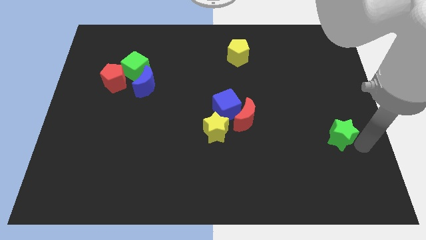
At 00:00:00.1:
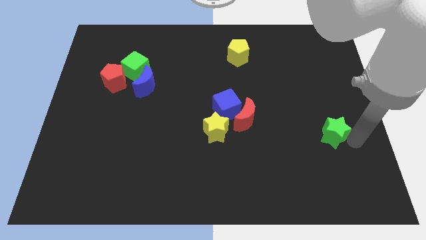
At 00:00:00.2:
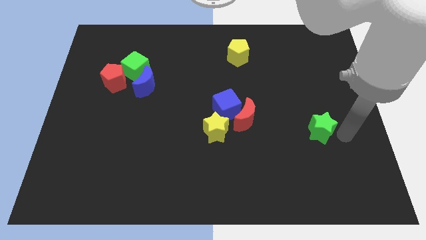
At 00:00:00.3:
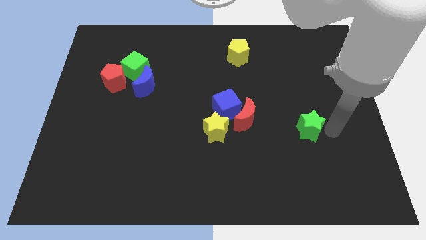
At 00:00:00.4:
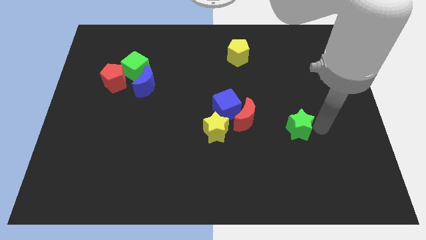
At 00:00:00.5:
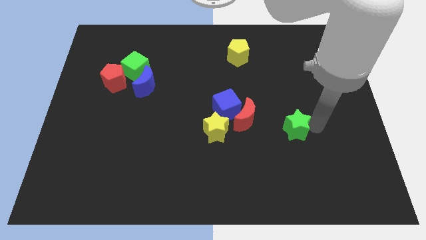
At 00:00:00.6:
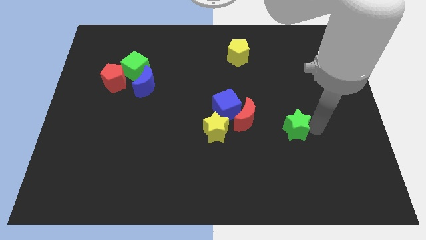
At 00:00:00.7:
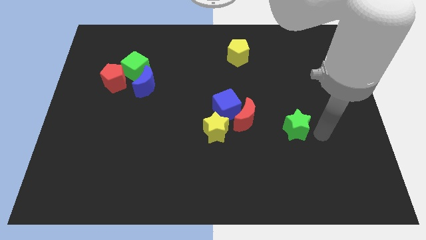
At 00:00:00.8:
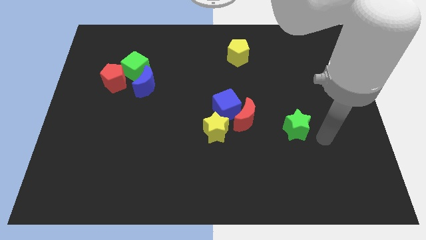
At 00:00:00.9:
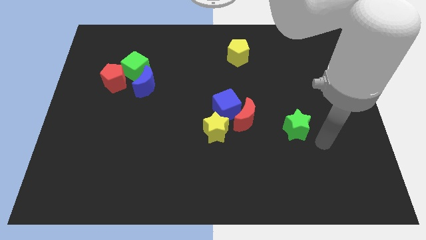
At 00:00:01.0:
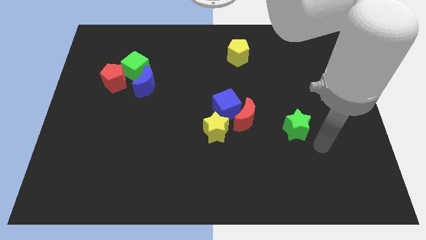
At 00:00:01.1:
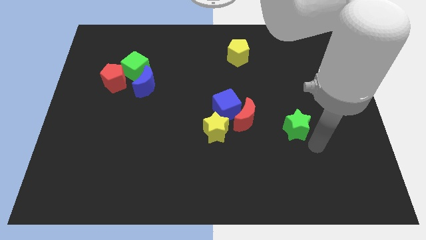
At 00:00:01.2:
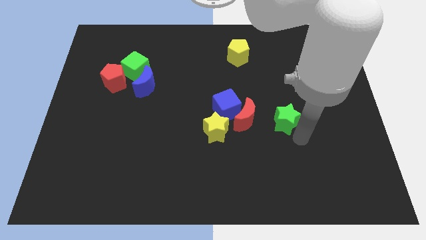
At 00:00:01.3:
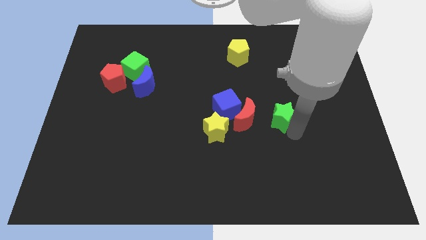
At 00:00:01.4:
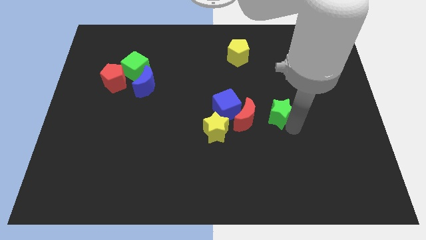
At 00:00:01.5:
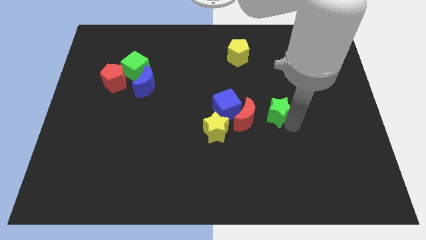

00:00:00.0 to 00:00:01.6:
push the green star to the left

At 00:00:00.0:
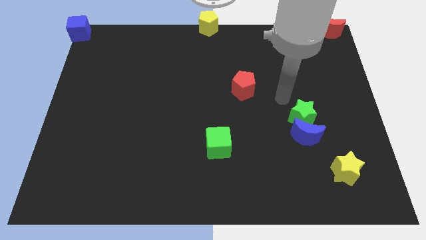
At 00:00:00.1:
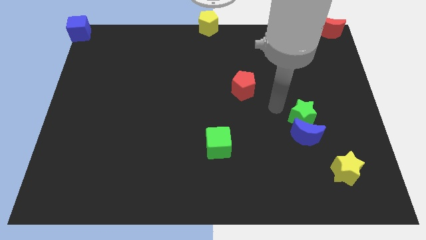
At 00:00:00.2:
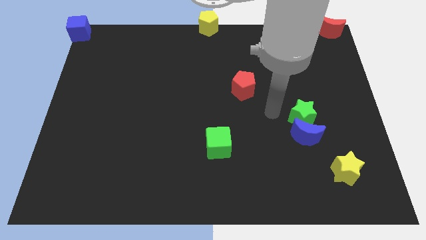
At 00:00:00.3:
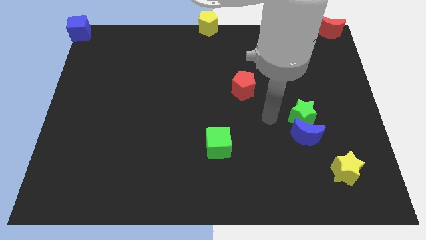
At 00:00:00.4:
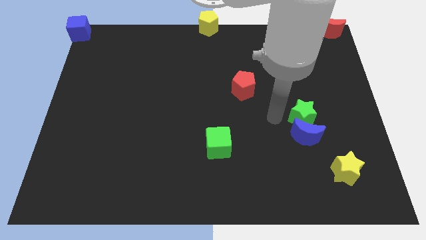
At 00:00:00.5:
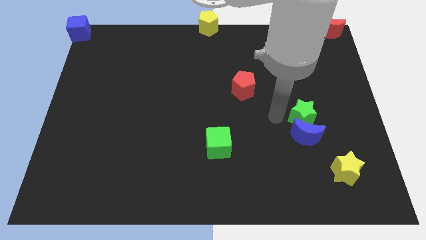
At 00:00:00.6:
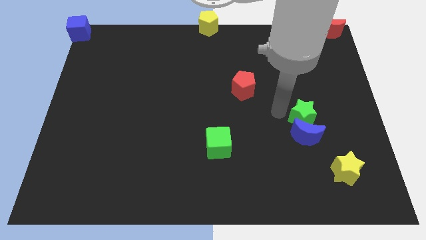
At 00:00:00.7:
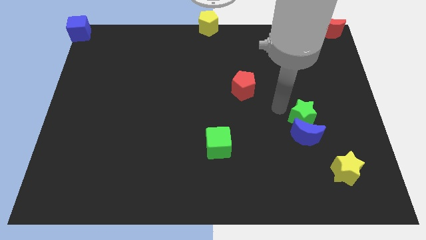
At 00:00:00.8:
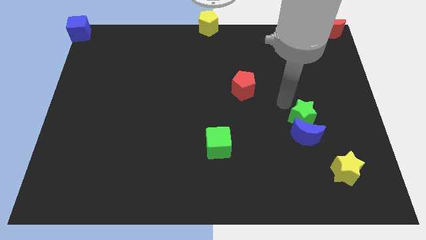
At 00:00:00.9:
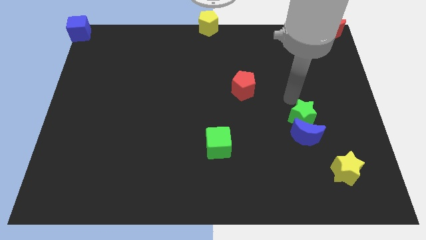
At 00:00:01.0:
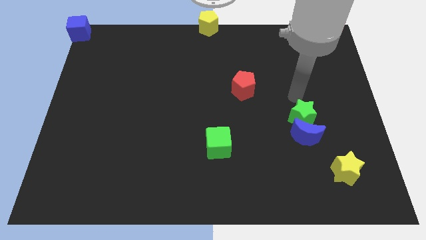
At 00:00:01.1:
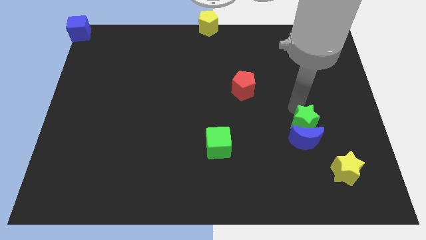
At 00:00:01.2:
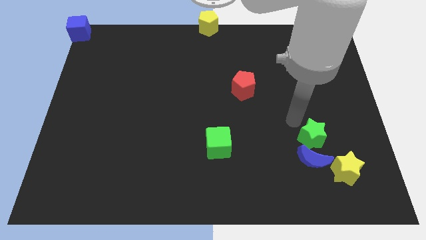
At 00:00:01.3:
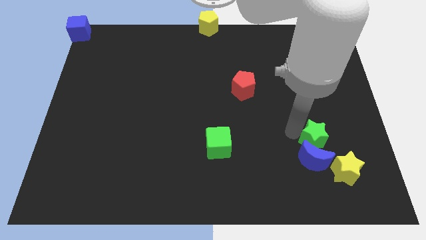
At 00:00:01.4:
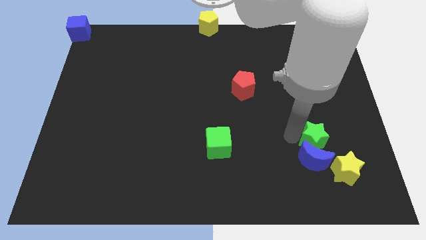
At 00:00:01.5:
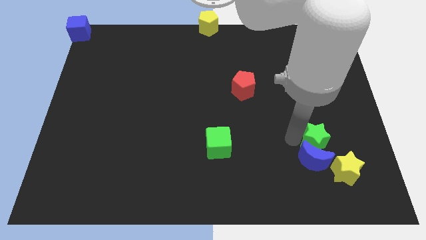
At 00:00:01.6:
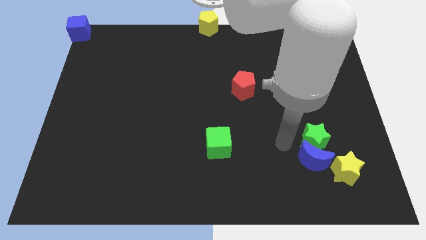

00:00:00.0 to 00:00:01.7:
push the green star and blue moon slightly to the bottom side of the board

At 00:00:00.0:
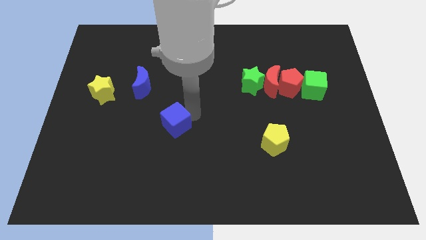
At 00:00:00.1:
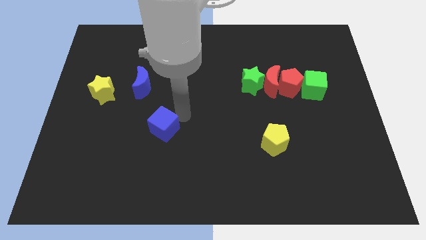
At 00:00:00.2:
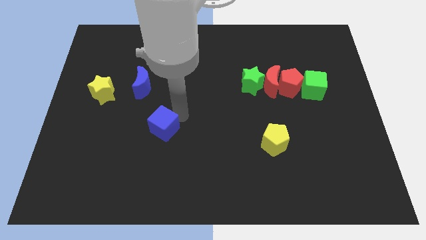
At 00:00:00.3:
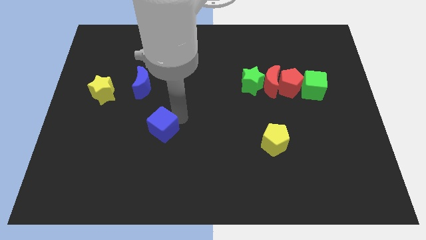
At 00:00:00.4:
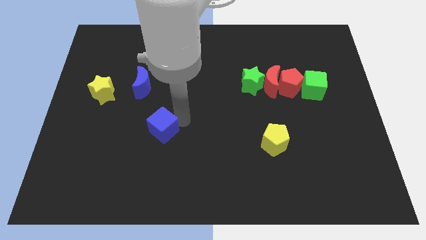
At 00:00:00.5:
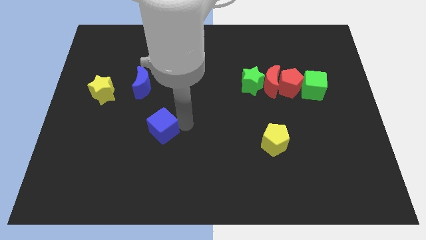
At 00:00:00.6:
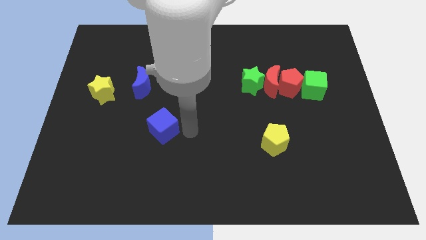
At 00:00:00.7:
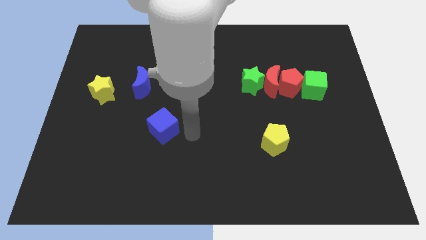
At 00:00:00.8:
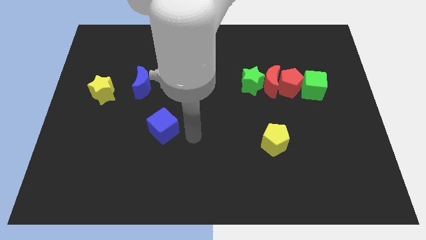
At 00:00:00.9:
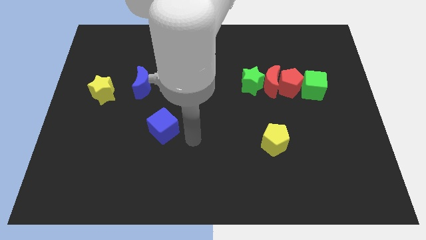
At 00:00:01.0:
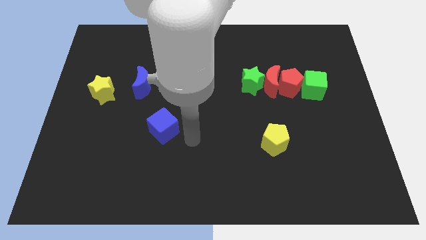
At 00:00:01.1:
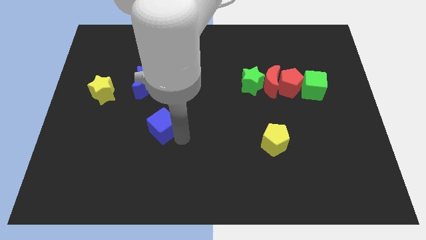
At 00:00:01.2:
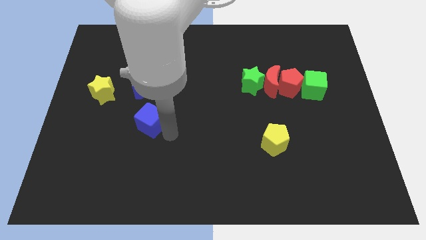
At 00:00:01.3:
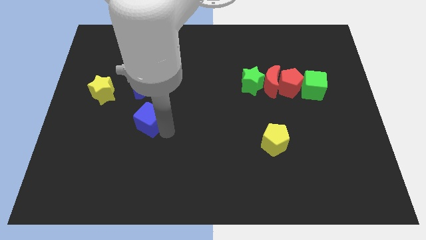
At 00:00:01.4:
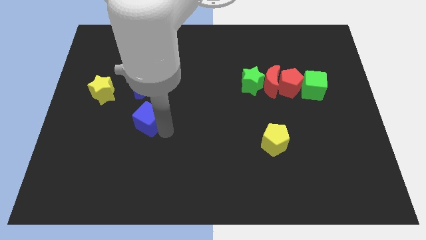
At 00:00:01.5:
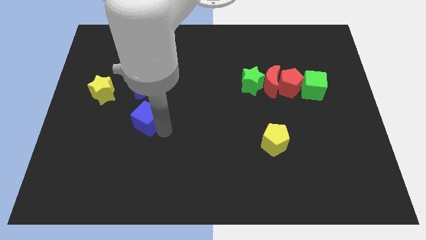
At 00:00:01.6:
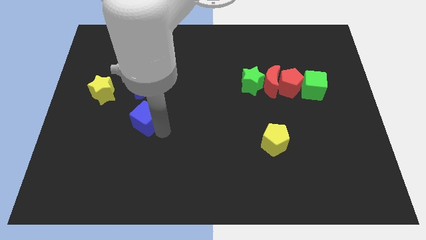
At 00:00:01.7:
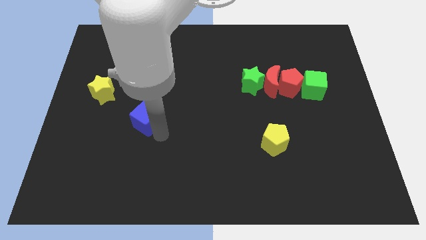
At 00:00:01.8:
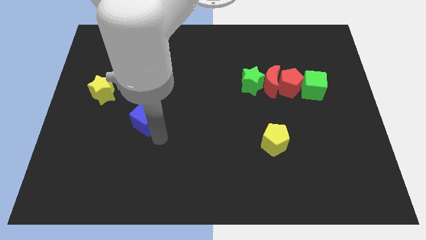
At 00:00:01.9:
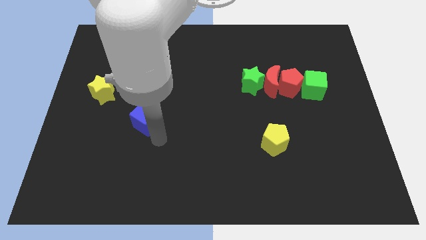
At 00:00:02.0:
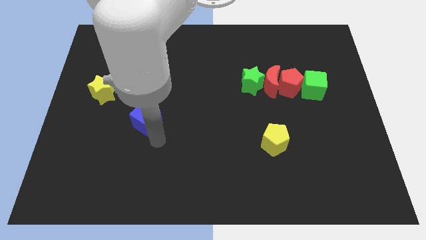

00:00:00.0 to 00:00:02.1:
place the blue cube vertically below the blue crescent

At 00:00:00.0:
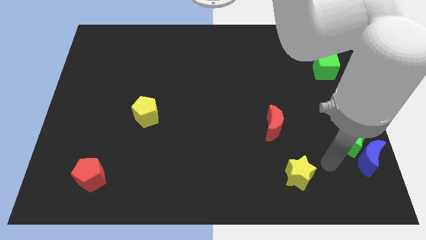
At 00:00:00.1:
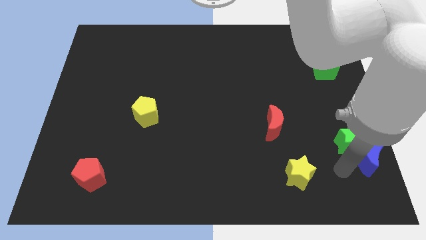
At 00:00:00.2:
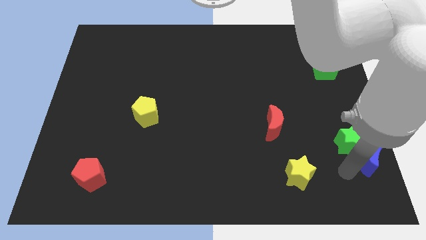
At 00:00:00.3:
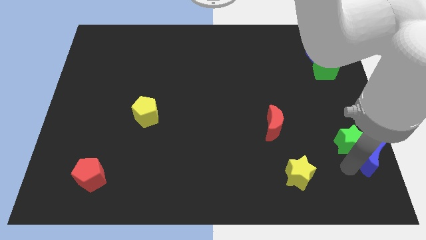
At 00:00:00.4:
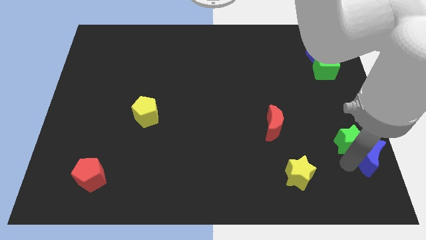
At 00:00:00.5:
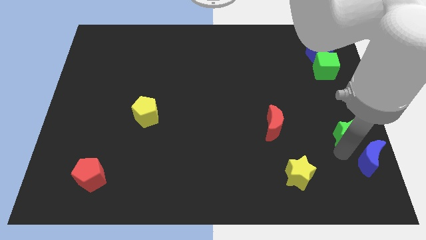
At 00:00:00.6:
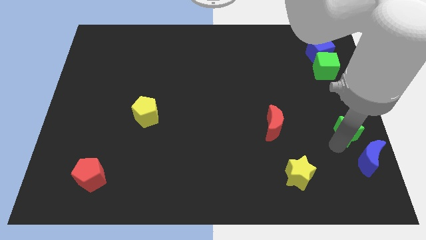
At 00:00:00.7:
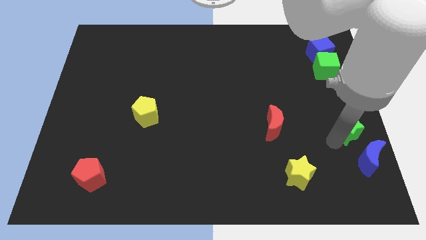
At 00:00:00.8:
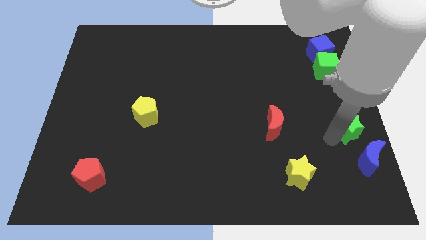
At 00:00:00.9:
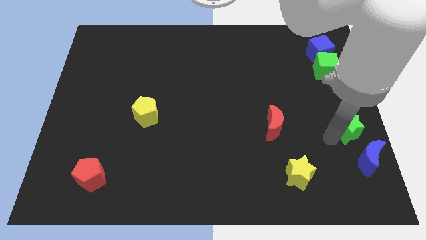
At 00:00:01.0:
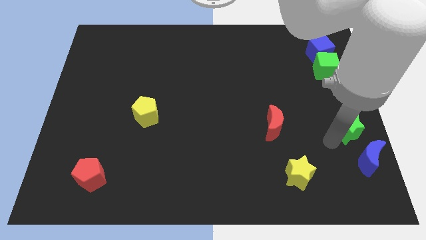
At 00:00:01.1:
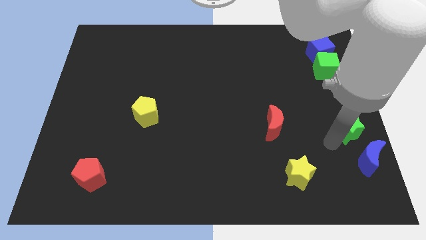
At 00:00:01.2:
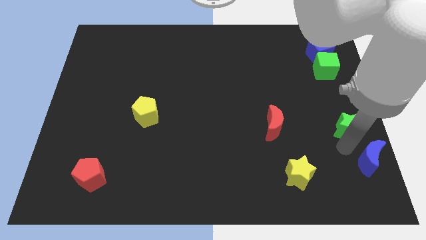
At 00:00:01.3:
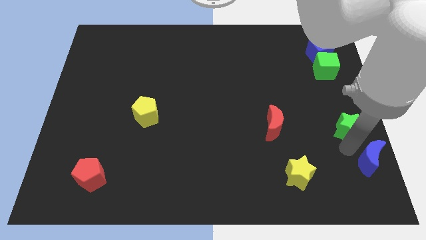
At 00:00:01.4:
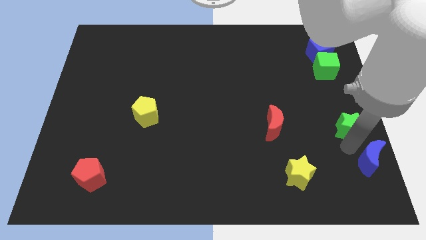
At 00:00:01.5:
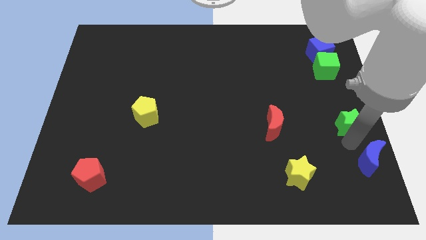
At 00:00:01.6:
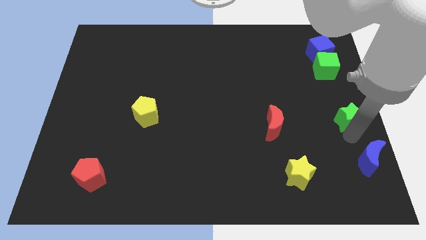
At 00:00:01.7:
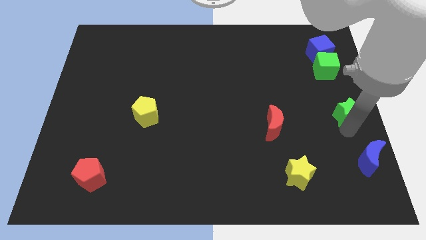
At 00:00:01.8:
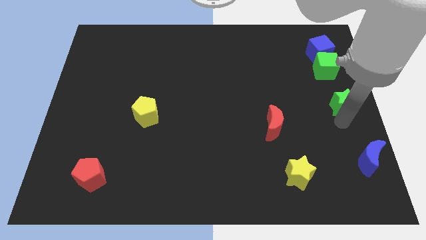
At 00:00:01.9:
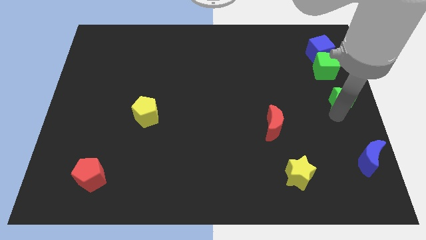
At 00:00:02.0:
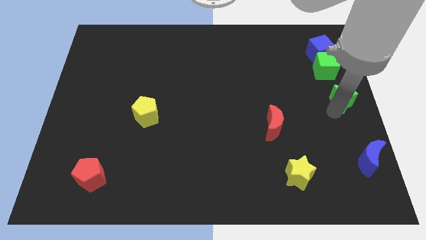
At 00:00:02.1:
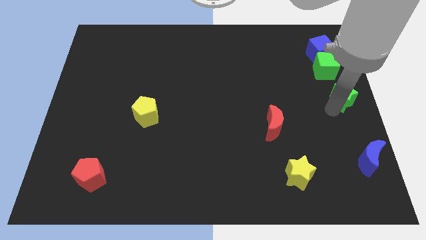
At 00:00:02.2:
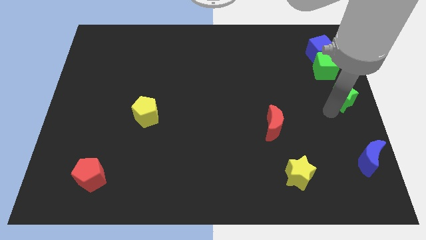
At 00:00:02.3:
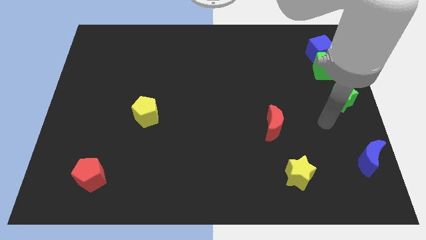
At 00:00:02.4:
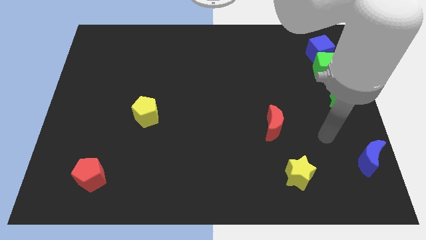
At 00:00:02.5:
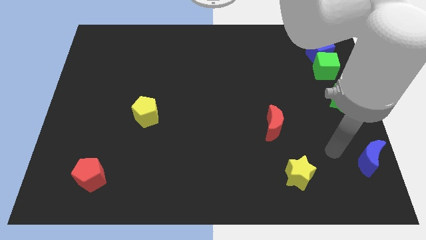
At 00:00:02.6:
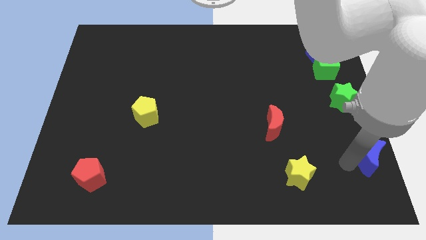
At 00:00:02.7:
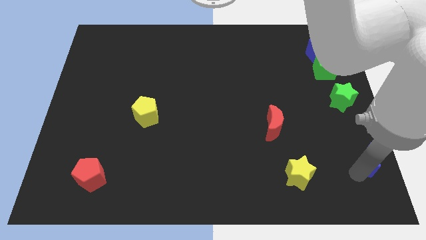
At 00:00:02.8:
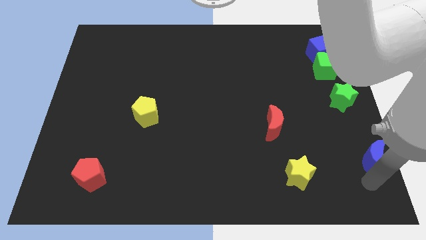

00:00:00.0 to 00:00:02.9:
move green star towards green cube

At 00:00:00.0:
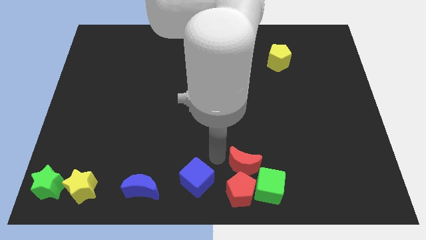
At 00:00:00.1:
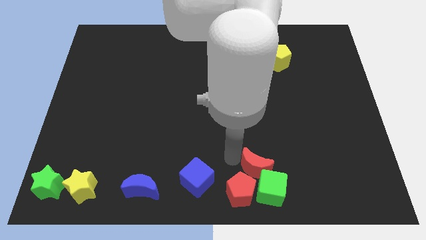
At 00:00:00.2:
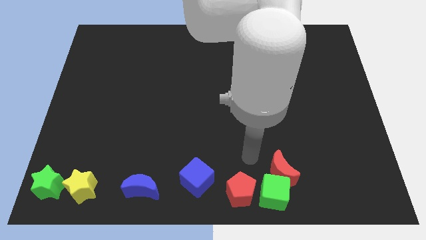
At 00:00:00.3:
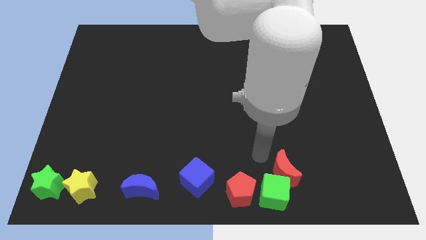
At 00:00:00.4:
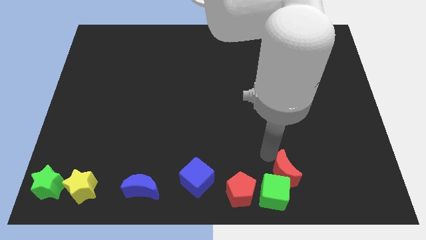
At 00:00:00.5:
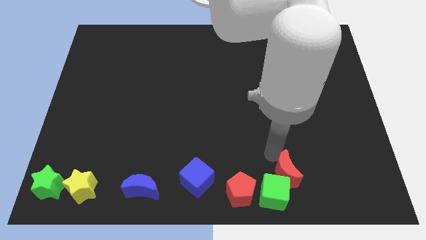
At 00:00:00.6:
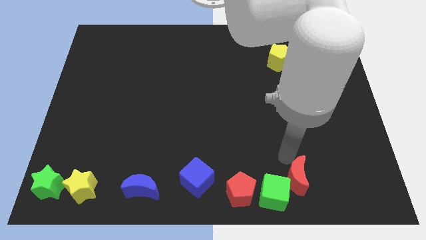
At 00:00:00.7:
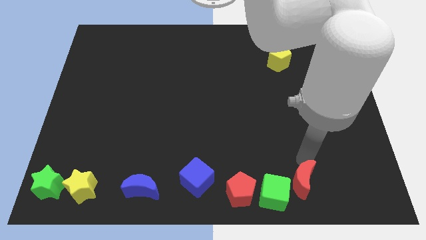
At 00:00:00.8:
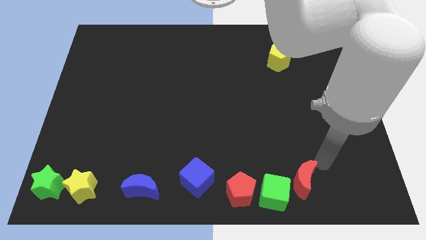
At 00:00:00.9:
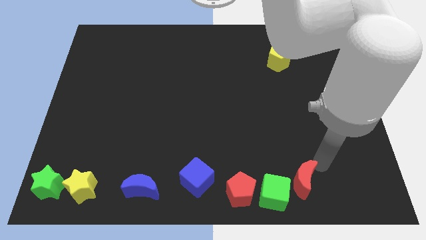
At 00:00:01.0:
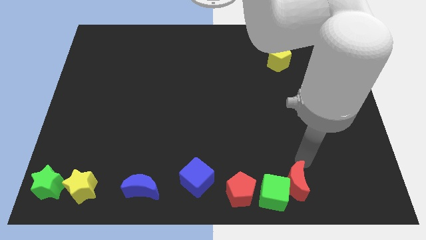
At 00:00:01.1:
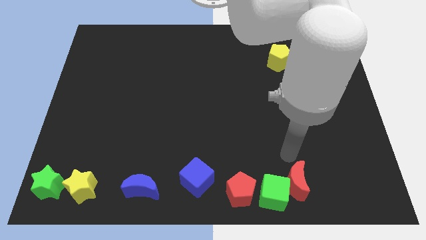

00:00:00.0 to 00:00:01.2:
place the red moon to the right of the green cube
